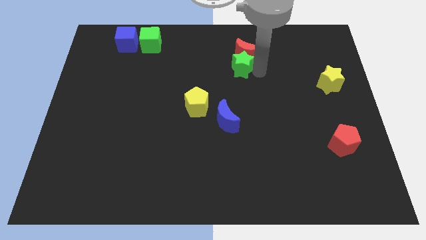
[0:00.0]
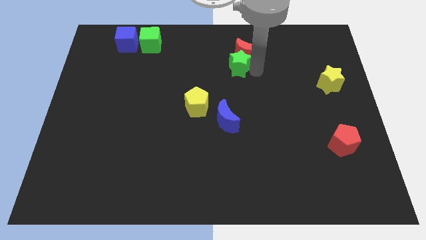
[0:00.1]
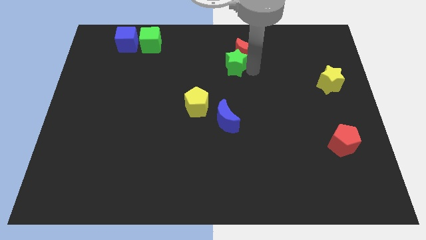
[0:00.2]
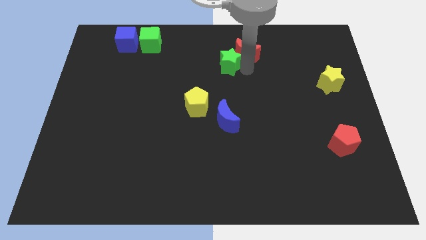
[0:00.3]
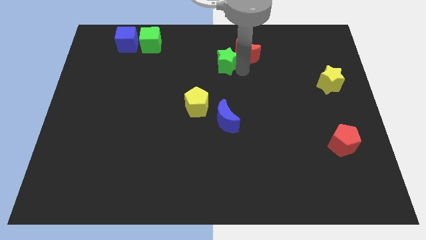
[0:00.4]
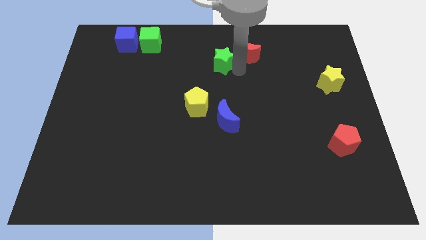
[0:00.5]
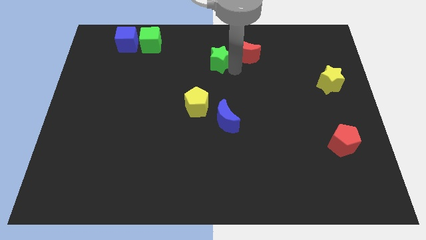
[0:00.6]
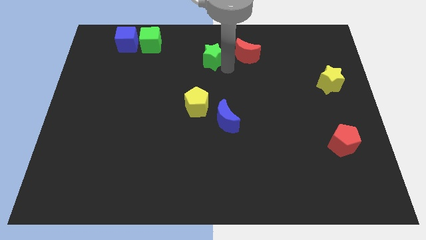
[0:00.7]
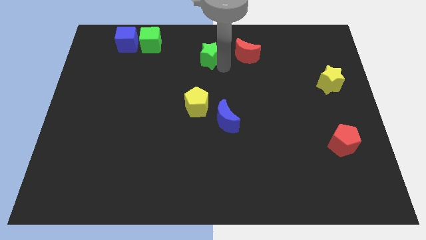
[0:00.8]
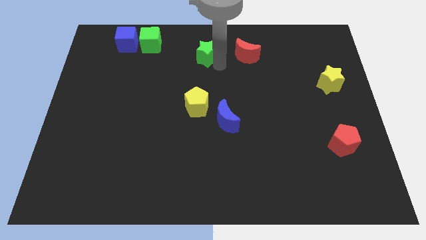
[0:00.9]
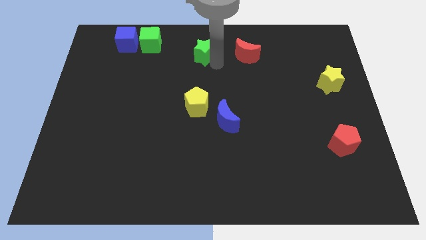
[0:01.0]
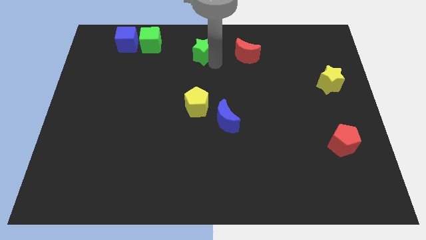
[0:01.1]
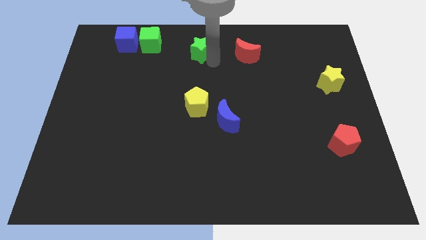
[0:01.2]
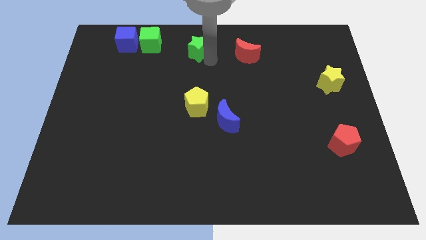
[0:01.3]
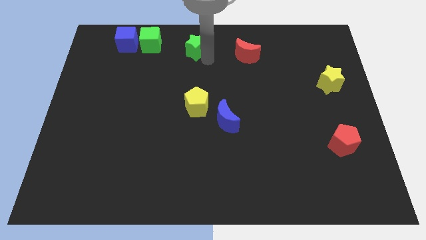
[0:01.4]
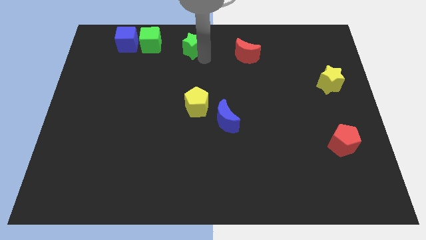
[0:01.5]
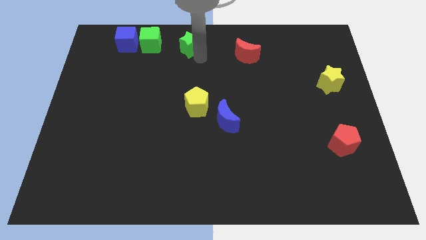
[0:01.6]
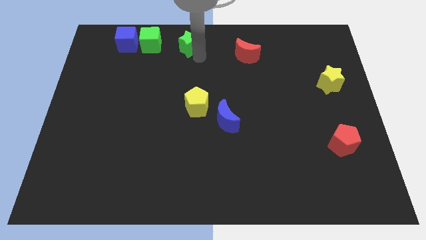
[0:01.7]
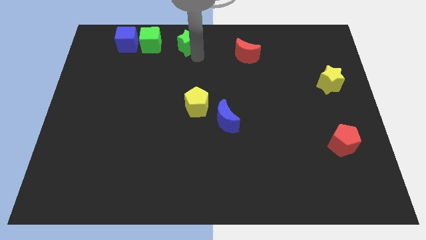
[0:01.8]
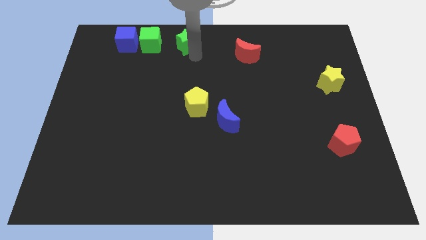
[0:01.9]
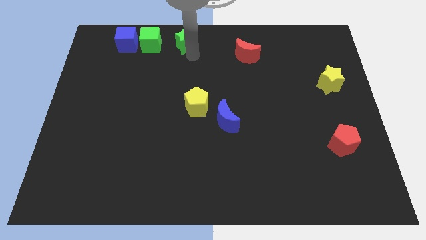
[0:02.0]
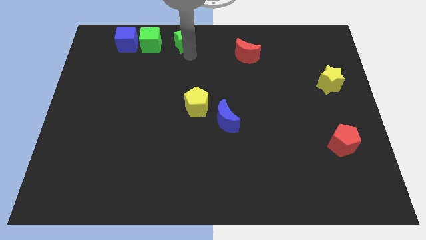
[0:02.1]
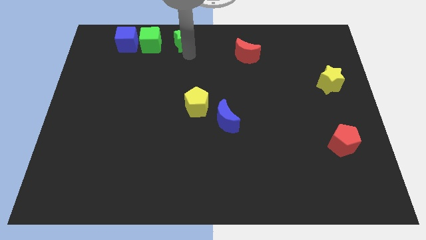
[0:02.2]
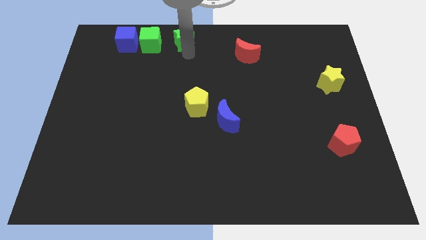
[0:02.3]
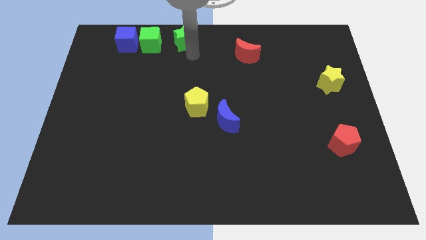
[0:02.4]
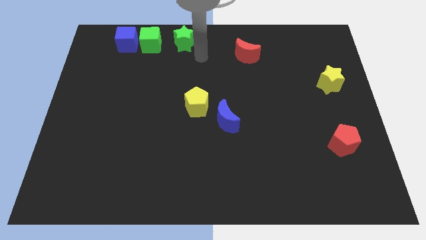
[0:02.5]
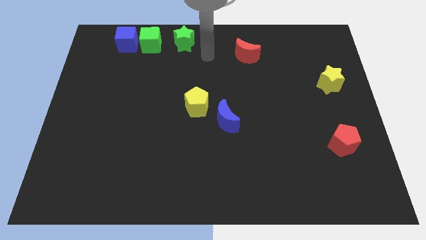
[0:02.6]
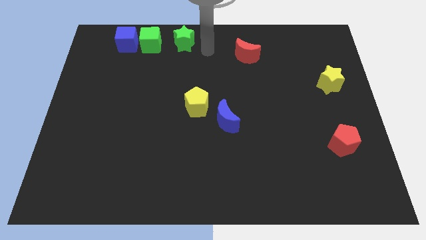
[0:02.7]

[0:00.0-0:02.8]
place the green star to the left of the green cube

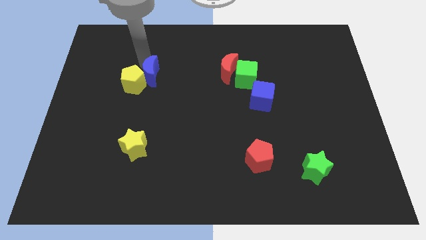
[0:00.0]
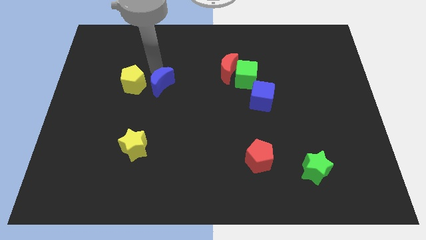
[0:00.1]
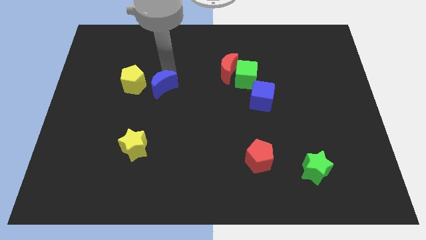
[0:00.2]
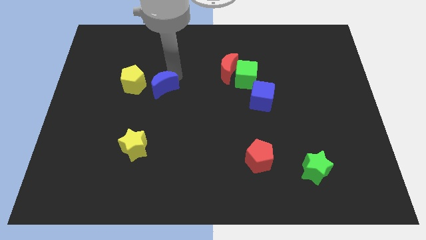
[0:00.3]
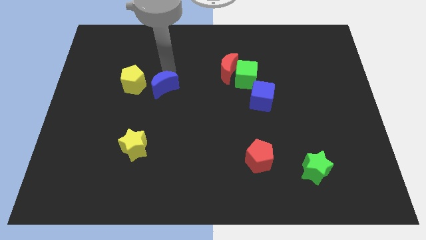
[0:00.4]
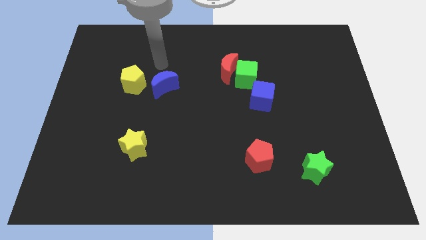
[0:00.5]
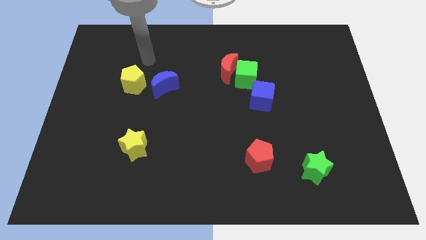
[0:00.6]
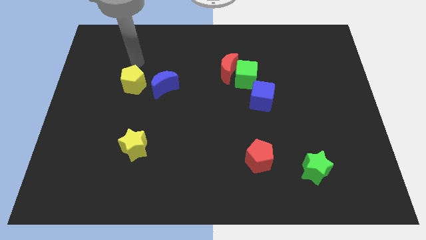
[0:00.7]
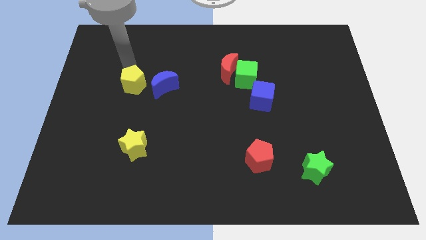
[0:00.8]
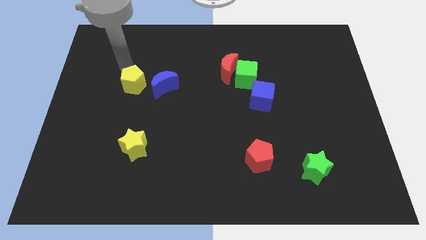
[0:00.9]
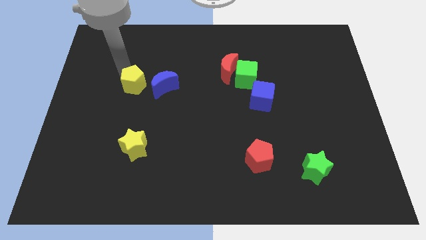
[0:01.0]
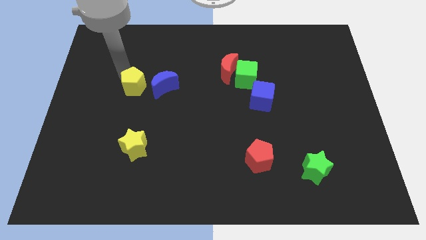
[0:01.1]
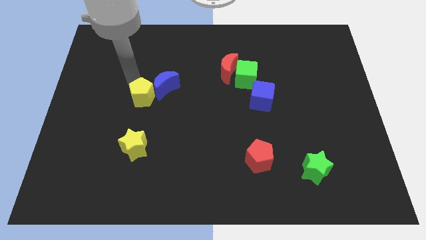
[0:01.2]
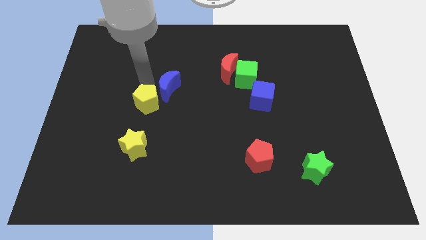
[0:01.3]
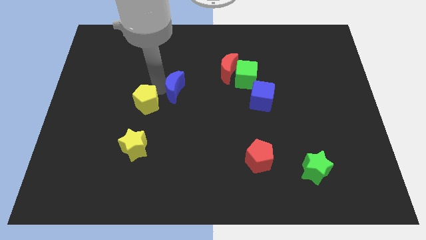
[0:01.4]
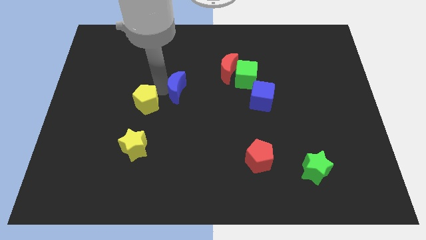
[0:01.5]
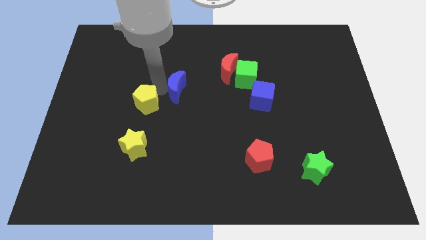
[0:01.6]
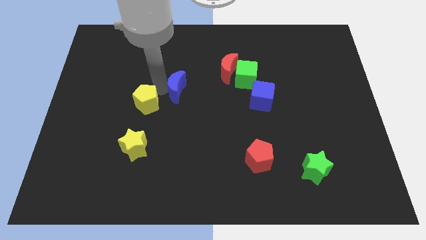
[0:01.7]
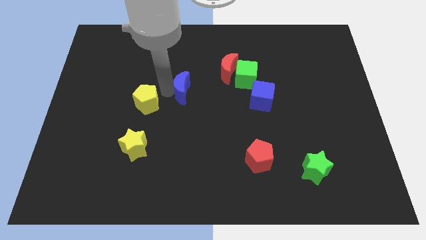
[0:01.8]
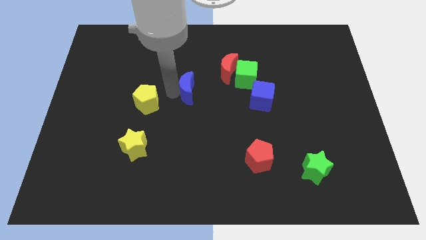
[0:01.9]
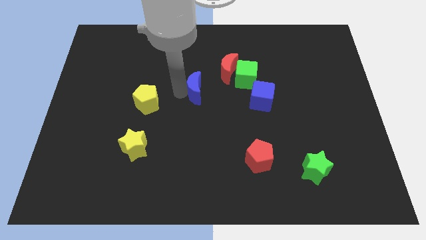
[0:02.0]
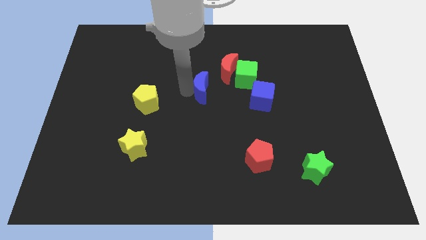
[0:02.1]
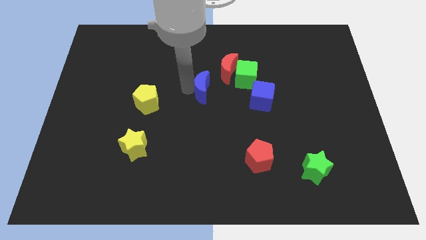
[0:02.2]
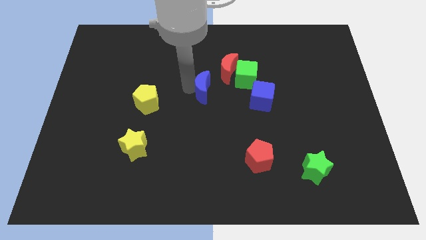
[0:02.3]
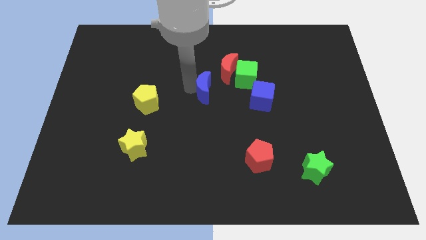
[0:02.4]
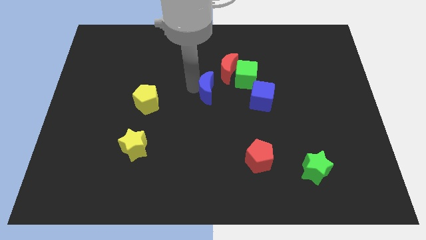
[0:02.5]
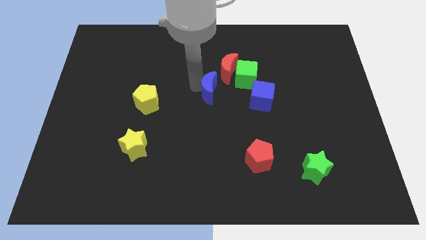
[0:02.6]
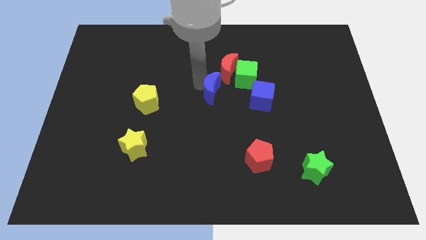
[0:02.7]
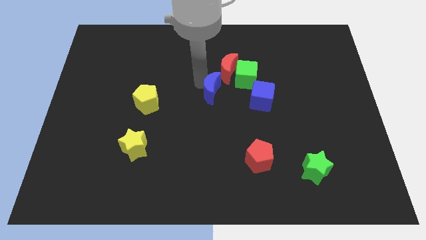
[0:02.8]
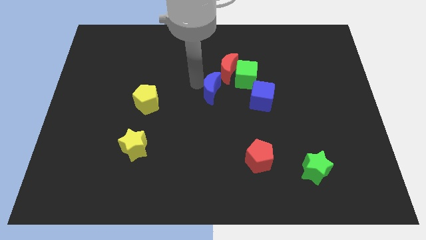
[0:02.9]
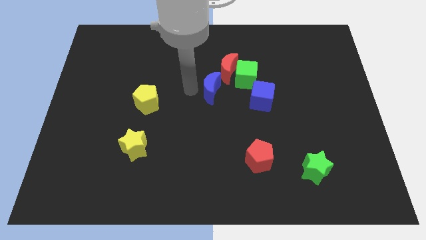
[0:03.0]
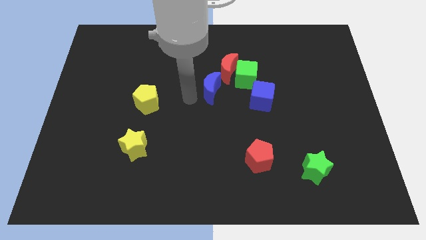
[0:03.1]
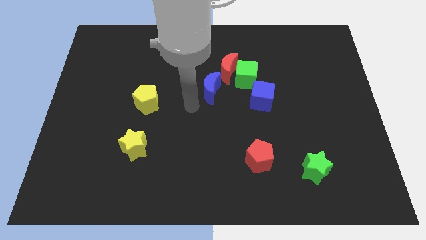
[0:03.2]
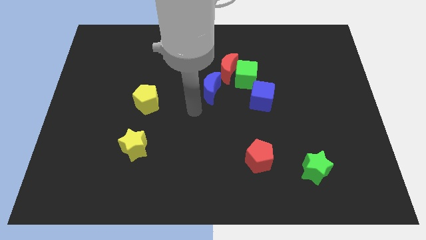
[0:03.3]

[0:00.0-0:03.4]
push blue moon towards red moon

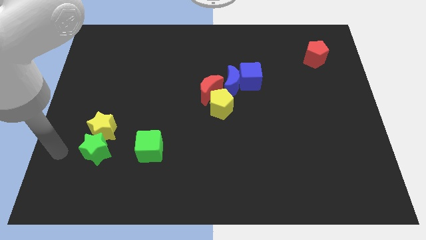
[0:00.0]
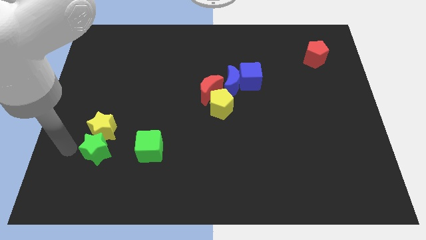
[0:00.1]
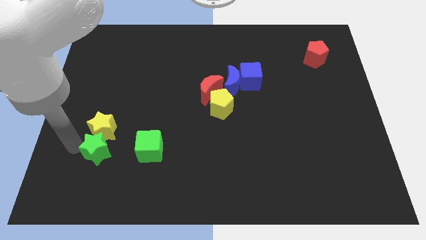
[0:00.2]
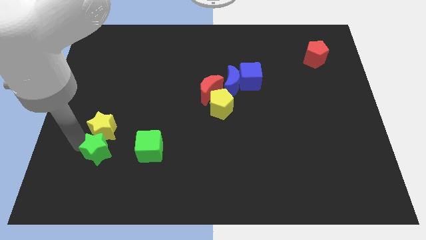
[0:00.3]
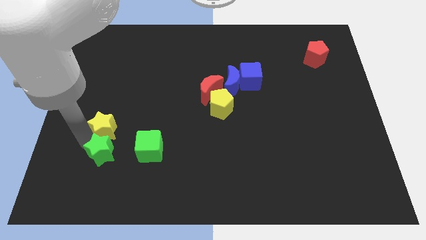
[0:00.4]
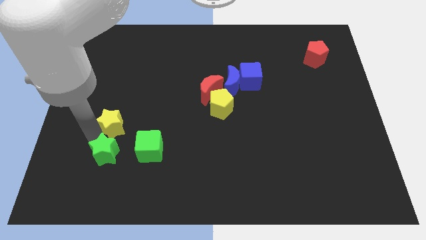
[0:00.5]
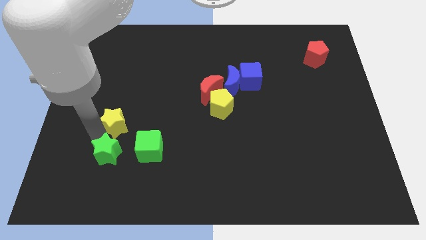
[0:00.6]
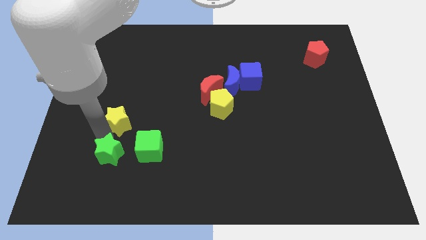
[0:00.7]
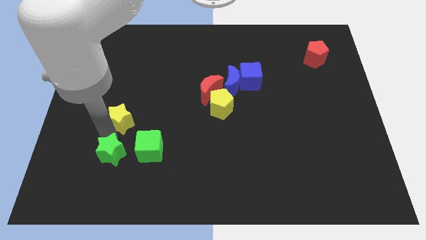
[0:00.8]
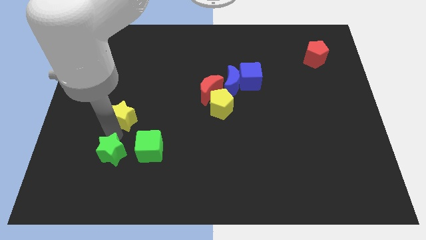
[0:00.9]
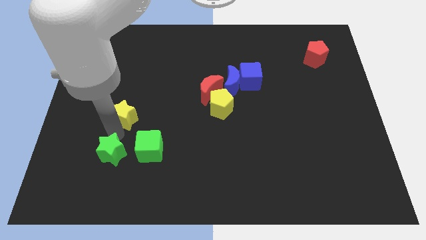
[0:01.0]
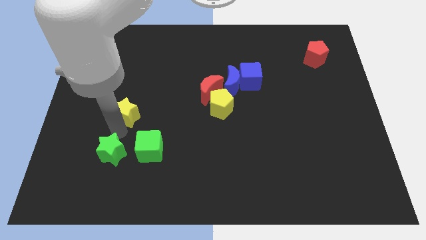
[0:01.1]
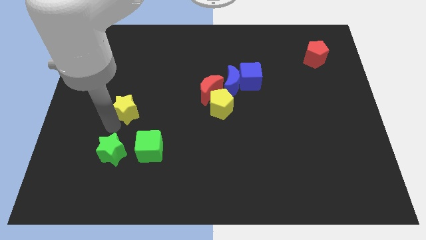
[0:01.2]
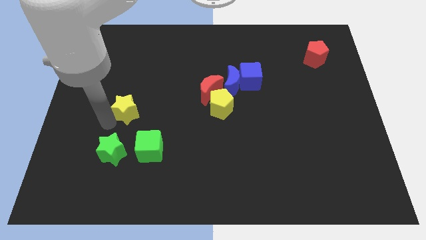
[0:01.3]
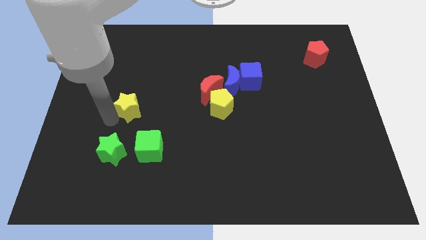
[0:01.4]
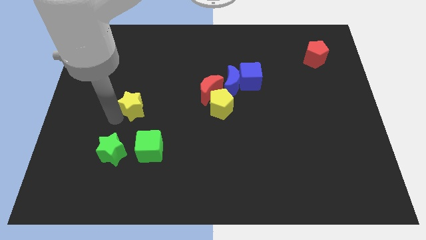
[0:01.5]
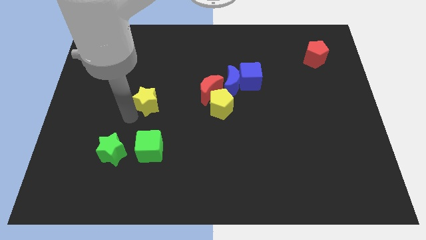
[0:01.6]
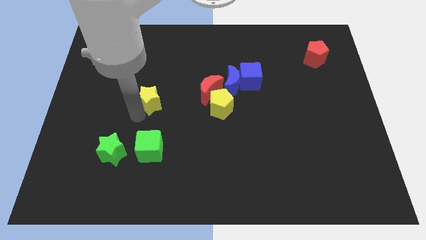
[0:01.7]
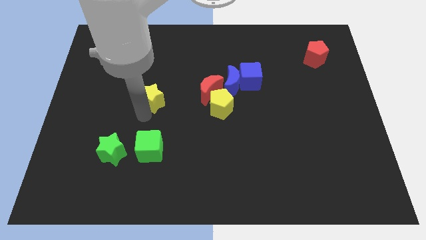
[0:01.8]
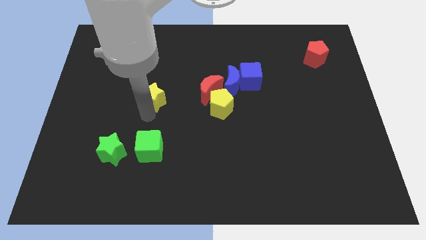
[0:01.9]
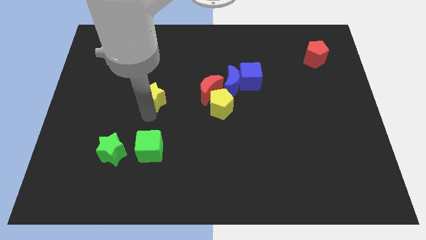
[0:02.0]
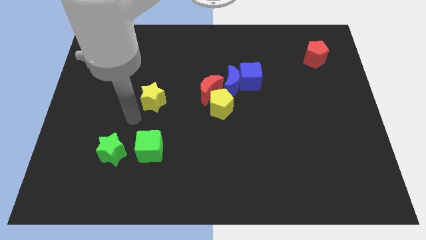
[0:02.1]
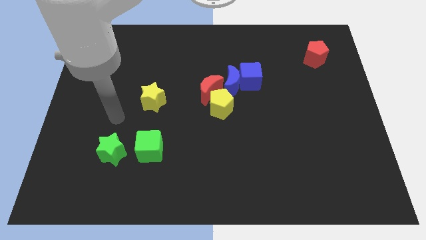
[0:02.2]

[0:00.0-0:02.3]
put the yellow star above the green cube

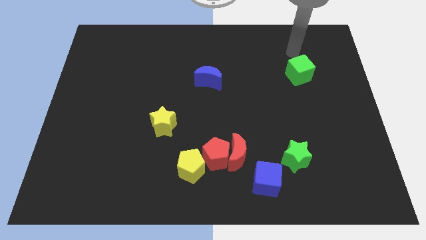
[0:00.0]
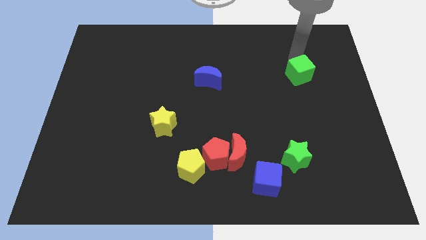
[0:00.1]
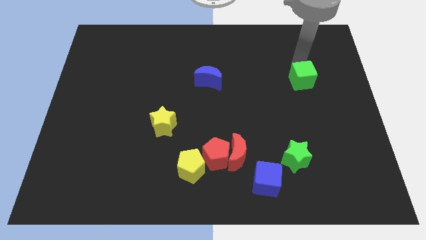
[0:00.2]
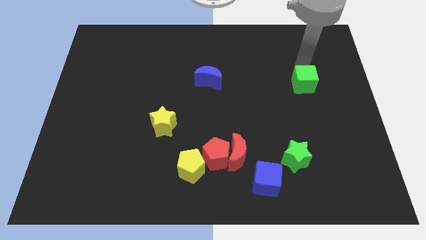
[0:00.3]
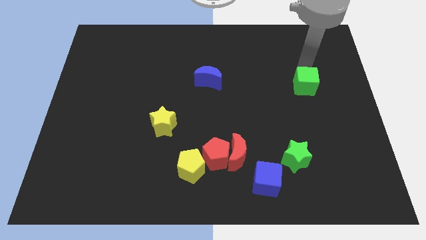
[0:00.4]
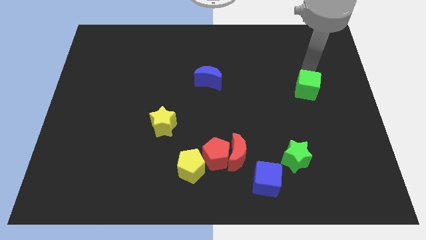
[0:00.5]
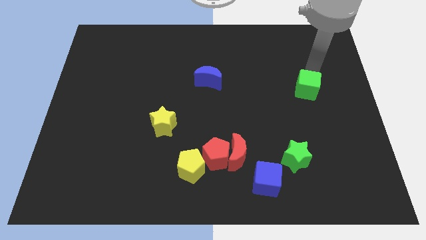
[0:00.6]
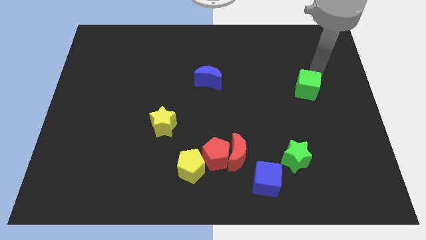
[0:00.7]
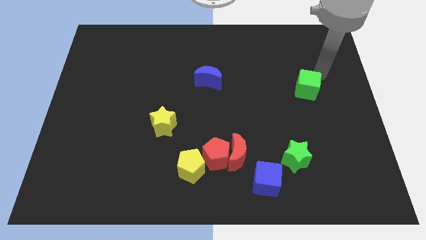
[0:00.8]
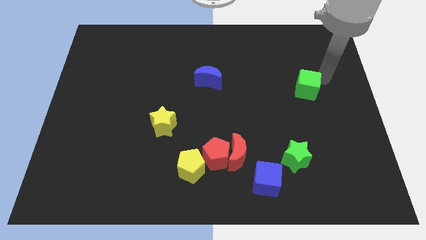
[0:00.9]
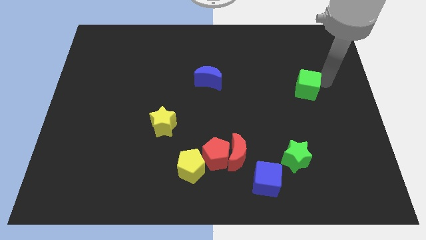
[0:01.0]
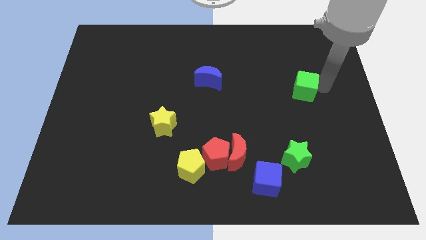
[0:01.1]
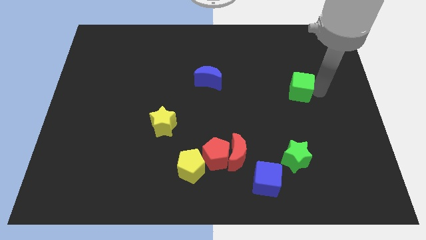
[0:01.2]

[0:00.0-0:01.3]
push green cube above green star
